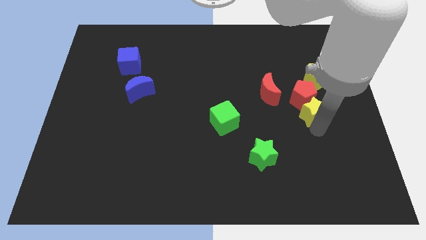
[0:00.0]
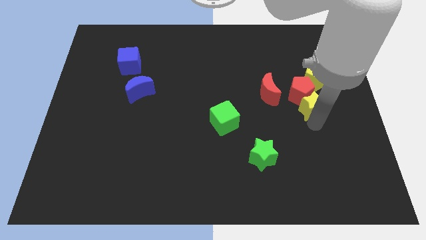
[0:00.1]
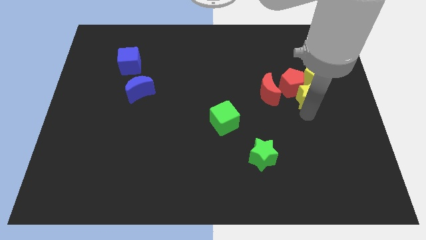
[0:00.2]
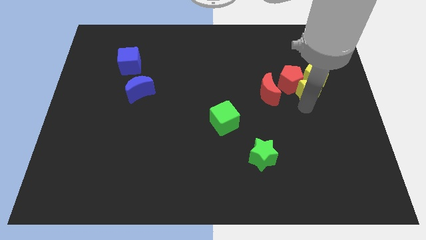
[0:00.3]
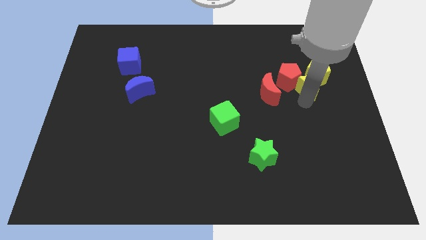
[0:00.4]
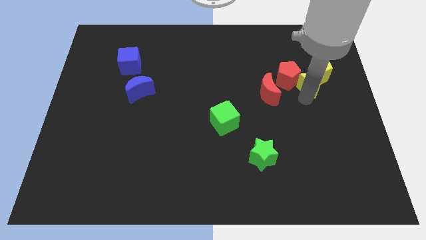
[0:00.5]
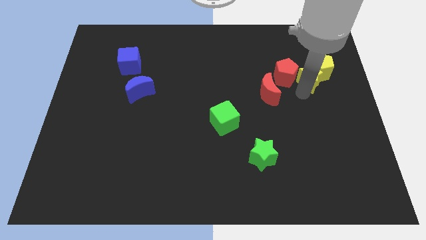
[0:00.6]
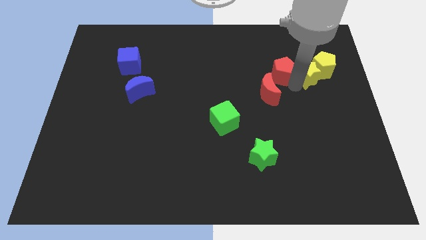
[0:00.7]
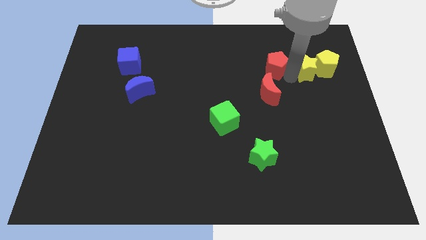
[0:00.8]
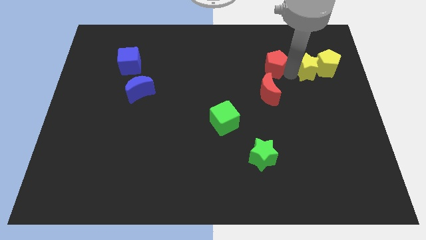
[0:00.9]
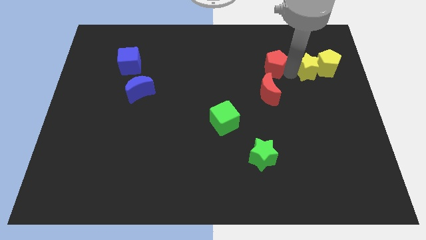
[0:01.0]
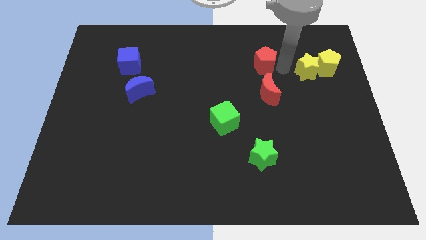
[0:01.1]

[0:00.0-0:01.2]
place the red pentagon above the red crescent

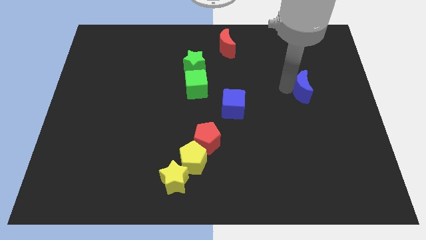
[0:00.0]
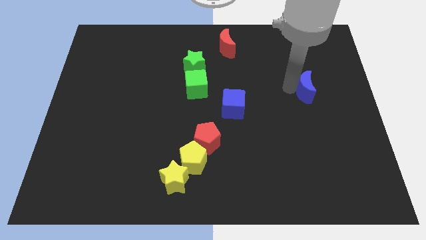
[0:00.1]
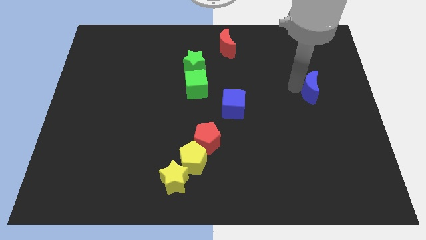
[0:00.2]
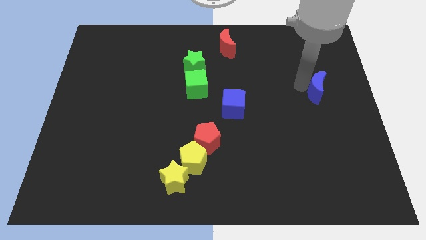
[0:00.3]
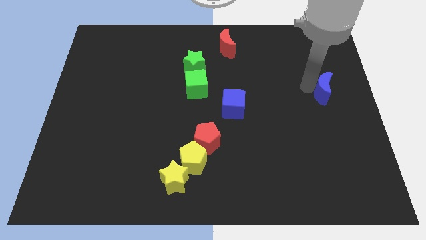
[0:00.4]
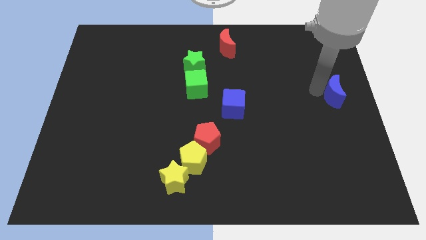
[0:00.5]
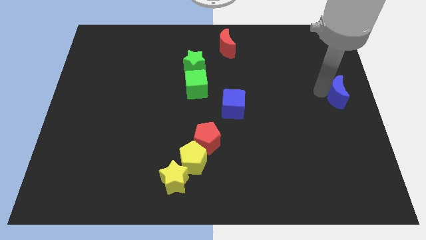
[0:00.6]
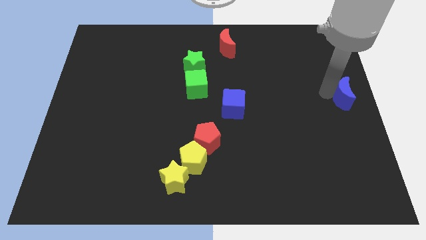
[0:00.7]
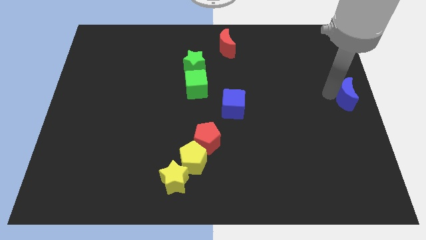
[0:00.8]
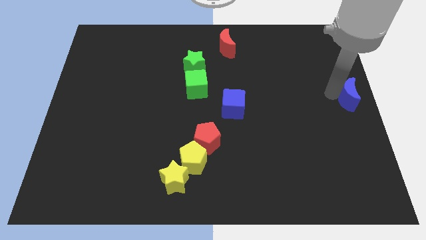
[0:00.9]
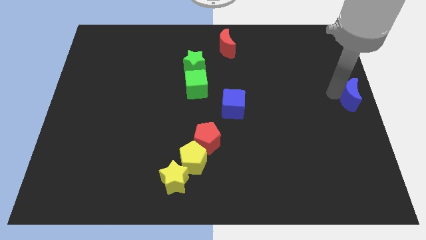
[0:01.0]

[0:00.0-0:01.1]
place blue moon at the center right

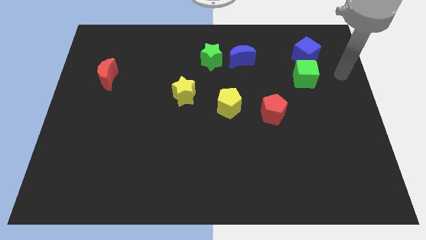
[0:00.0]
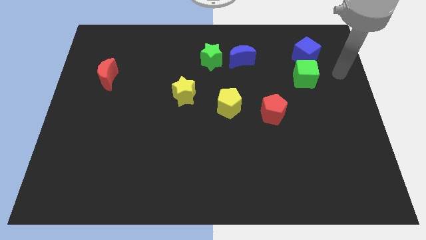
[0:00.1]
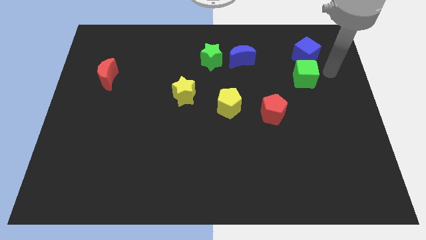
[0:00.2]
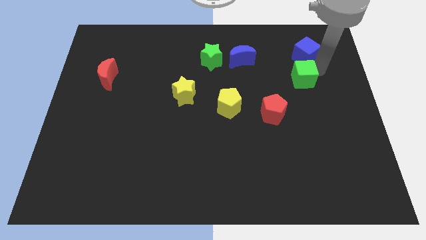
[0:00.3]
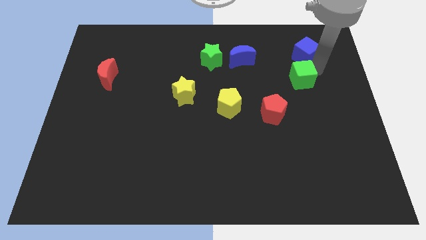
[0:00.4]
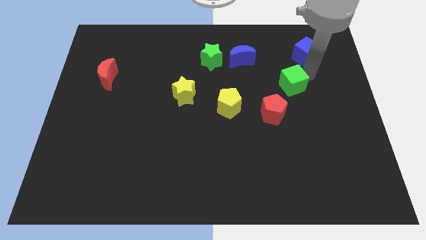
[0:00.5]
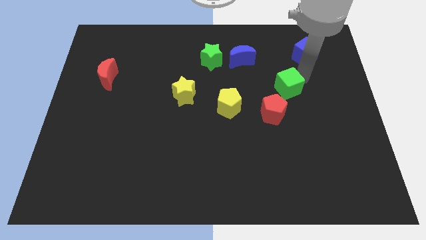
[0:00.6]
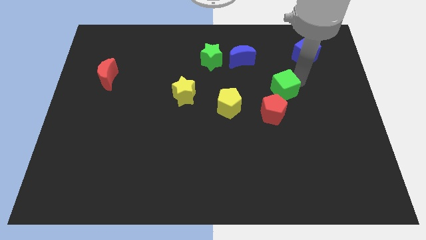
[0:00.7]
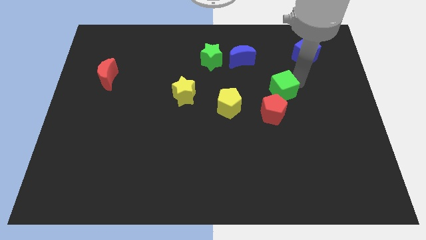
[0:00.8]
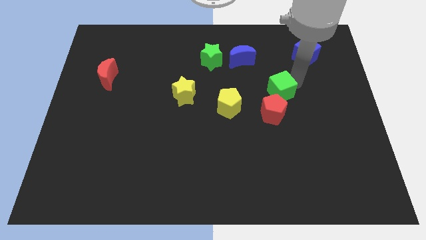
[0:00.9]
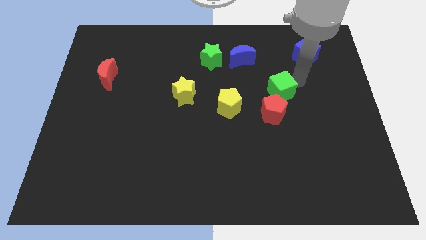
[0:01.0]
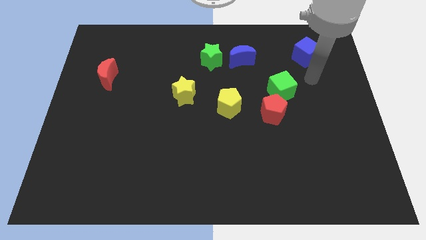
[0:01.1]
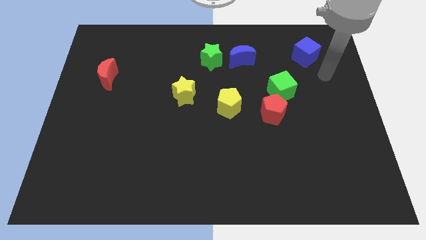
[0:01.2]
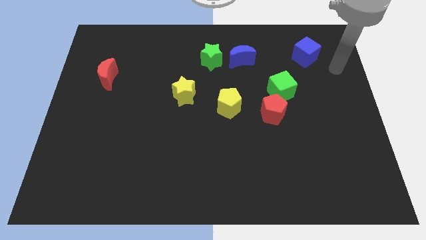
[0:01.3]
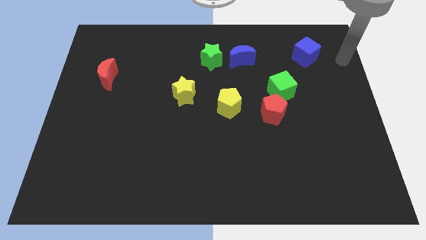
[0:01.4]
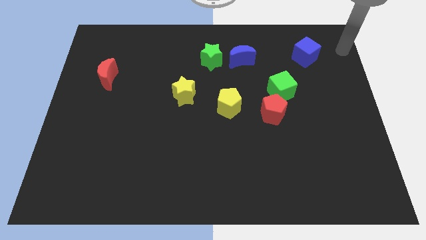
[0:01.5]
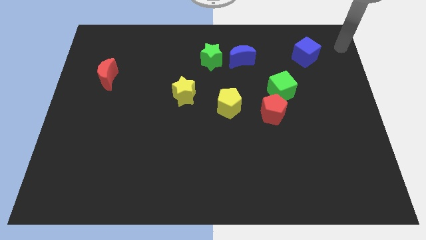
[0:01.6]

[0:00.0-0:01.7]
push the green block to the top of the red pentagon

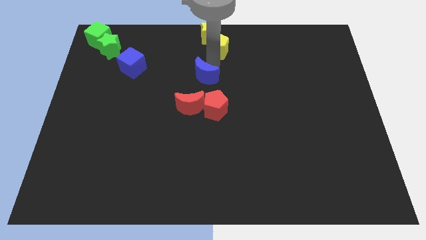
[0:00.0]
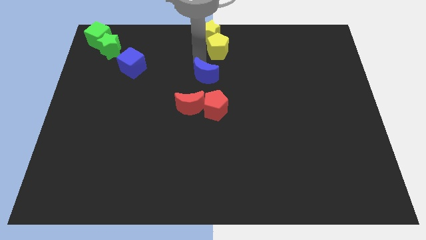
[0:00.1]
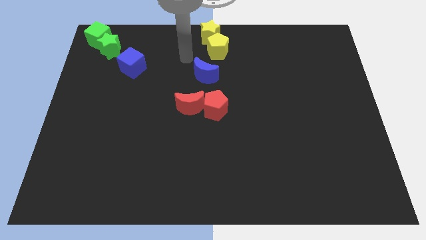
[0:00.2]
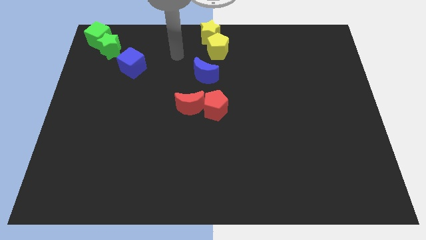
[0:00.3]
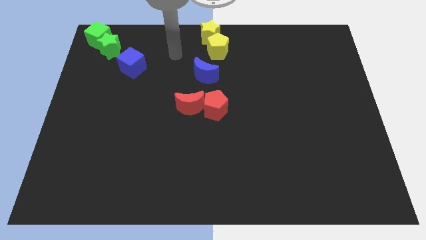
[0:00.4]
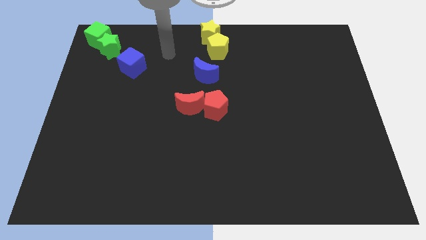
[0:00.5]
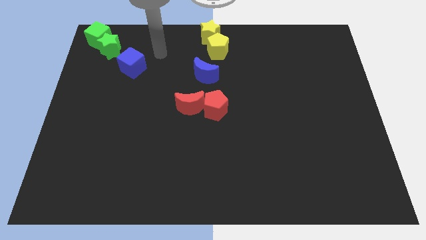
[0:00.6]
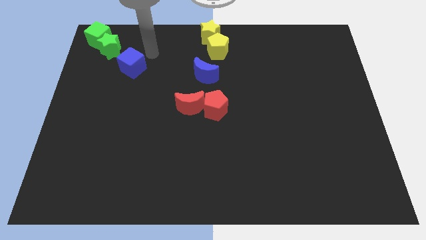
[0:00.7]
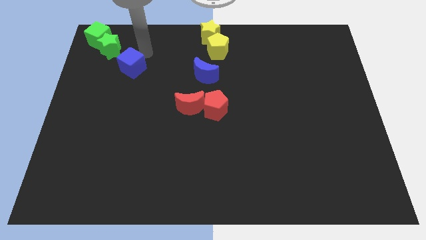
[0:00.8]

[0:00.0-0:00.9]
place your arm at the top of blue cube

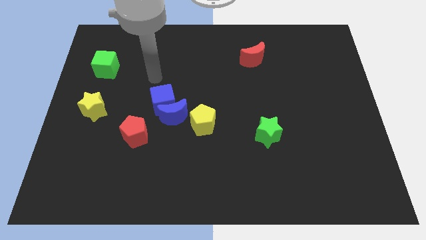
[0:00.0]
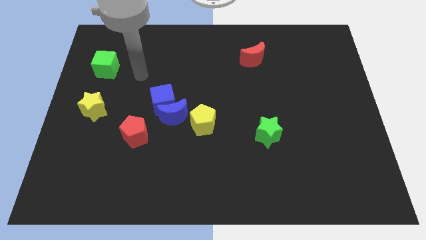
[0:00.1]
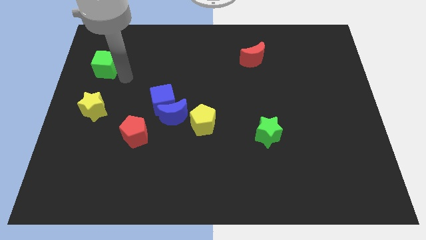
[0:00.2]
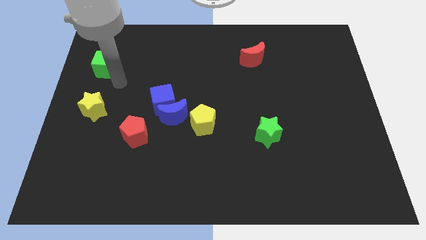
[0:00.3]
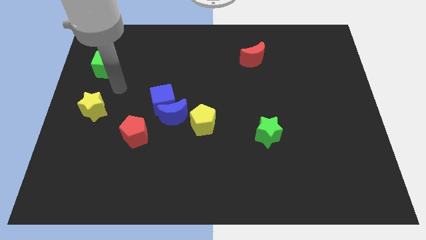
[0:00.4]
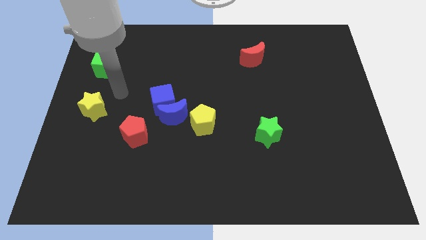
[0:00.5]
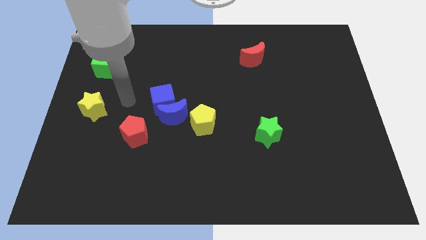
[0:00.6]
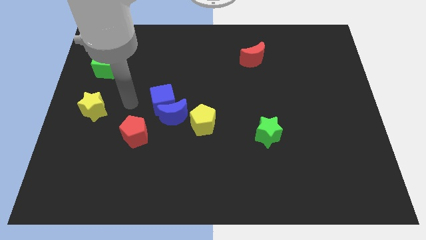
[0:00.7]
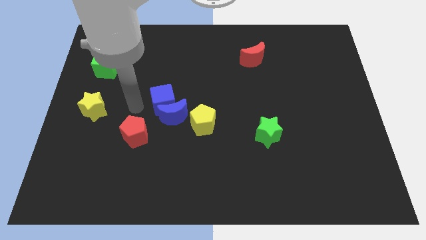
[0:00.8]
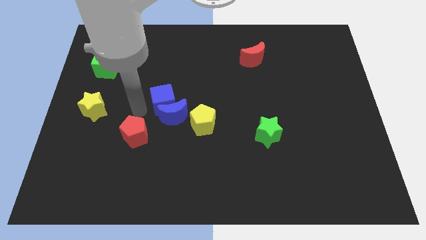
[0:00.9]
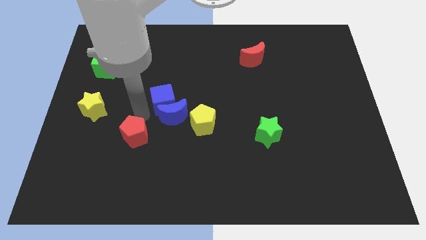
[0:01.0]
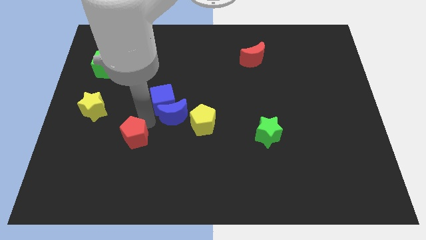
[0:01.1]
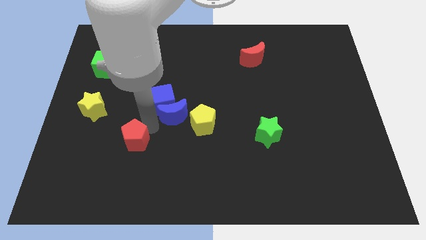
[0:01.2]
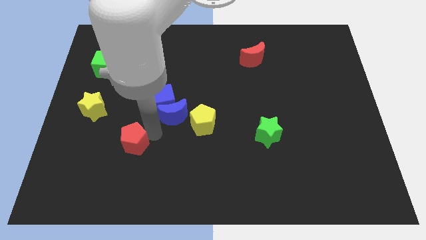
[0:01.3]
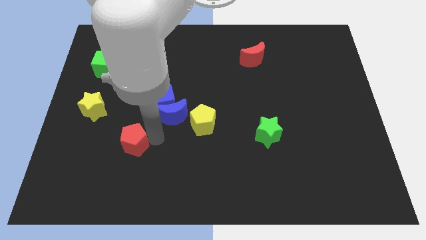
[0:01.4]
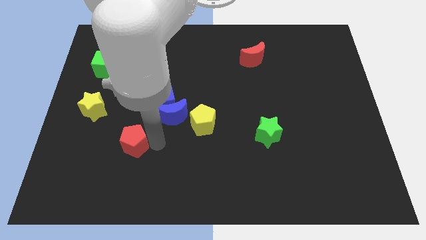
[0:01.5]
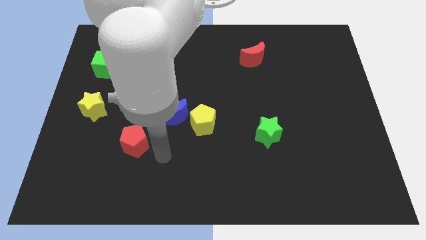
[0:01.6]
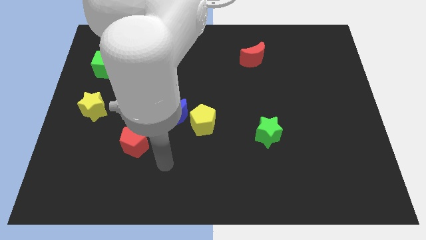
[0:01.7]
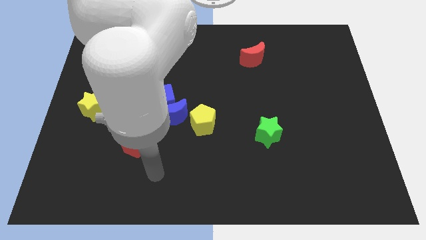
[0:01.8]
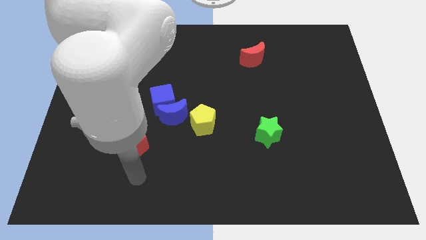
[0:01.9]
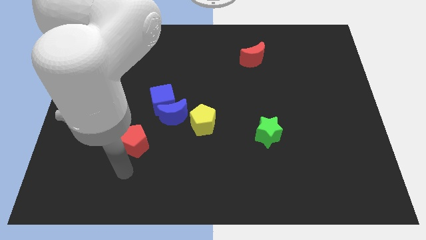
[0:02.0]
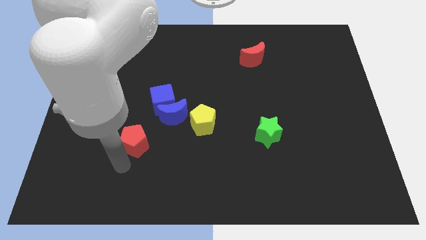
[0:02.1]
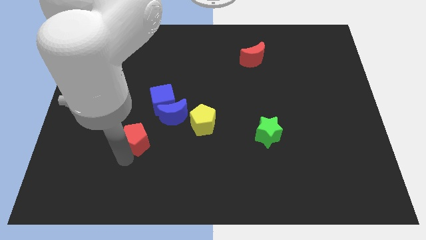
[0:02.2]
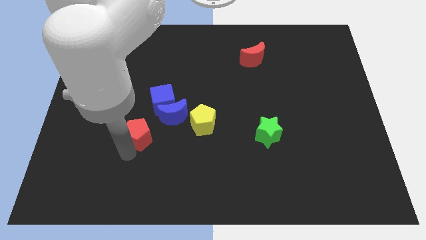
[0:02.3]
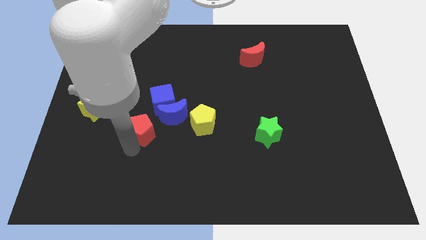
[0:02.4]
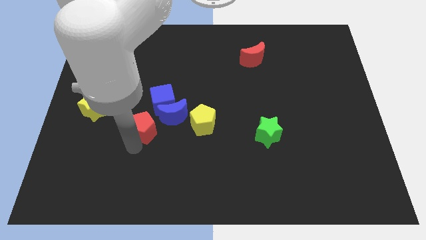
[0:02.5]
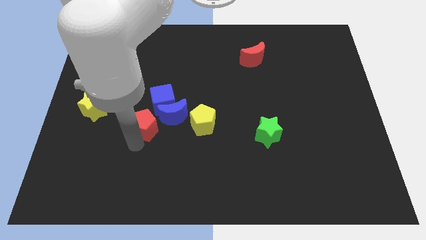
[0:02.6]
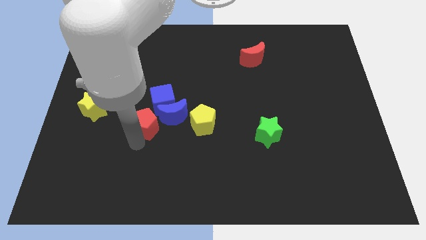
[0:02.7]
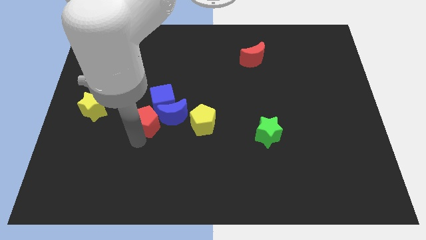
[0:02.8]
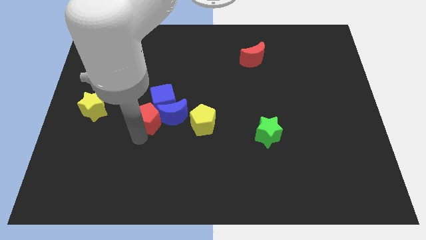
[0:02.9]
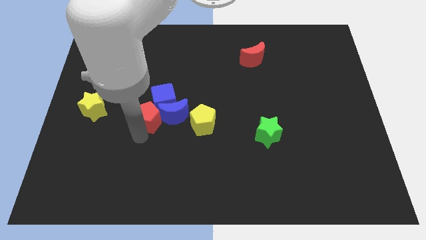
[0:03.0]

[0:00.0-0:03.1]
move the red pentagon to the left of the blue crescent

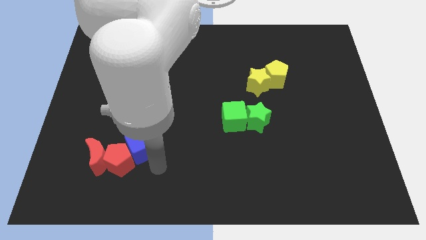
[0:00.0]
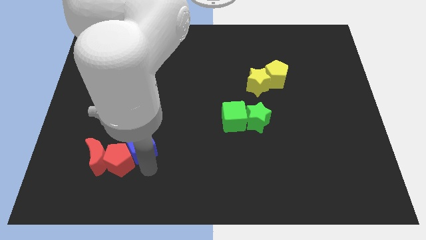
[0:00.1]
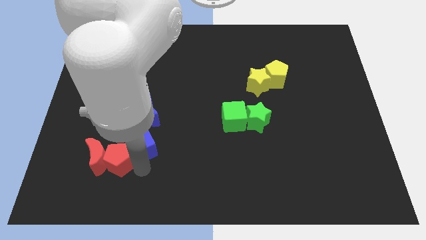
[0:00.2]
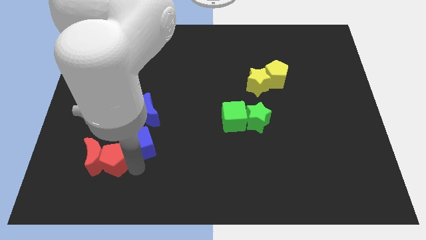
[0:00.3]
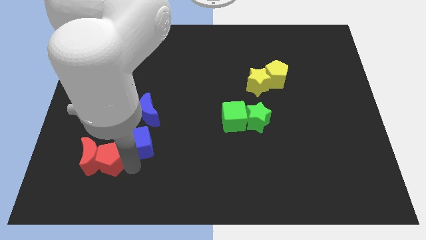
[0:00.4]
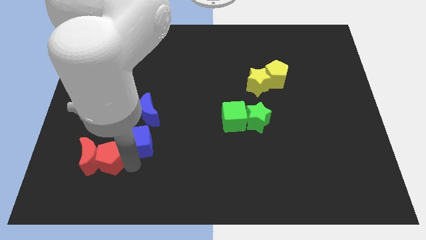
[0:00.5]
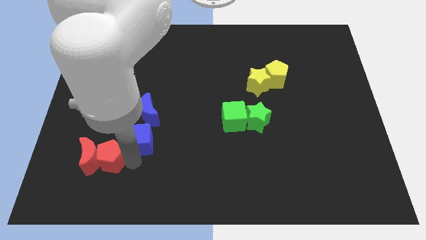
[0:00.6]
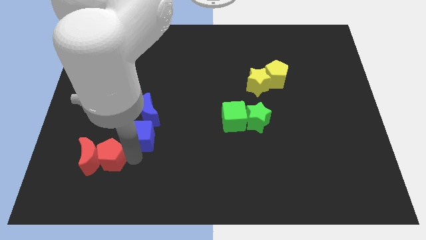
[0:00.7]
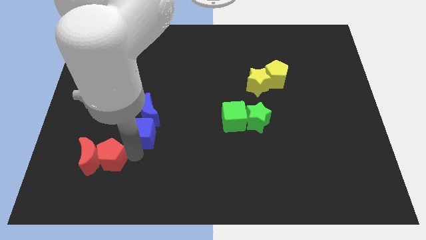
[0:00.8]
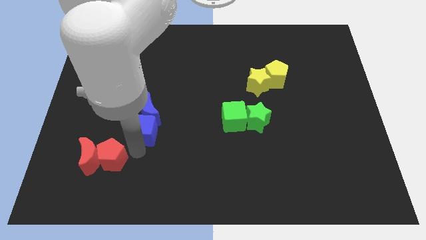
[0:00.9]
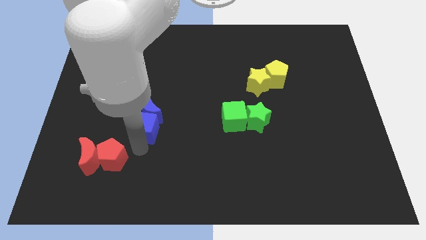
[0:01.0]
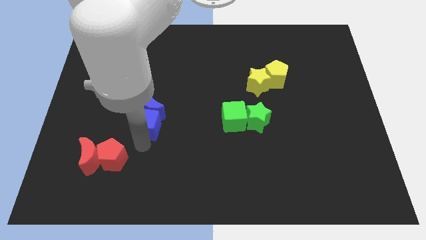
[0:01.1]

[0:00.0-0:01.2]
push the blue cube into the blue crescent
